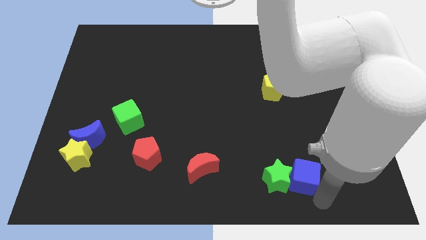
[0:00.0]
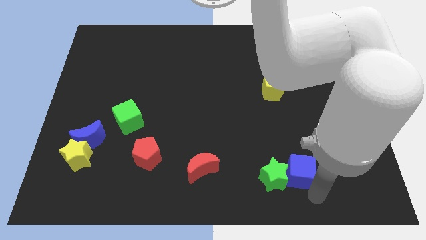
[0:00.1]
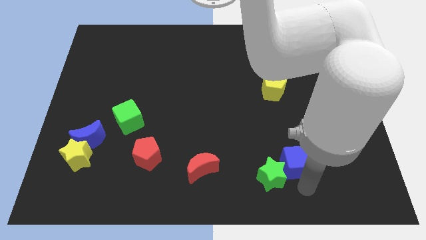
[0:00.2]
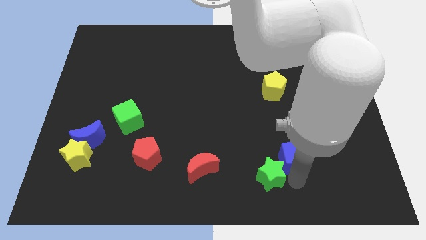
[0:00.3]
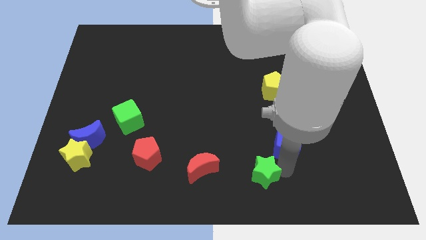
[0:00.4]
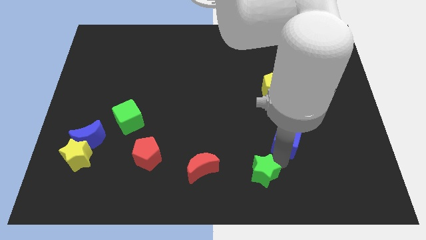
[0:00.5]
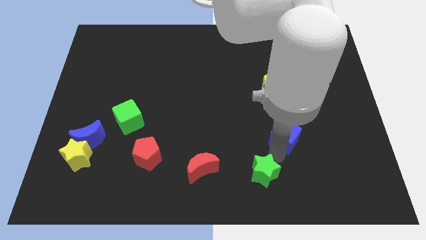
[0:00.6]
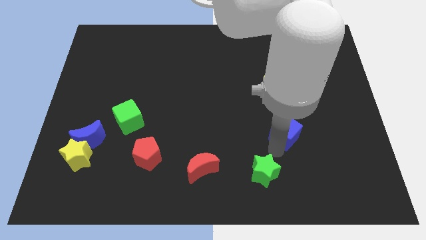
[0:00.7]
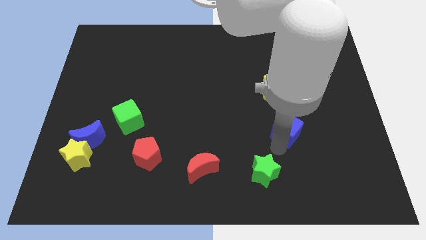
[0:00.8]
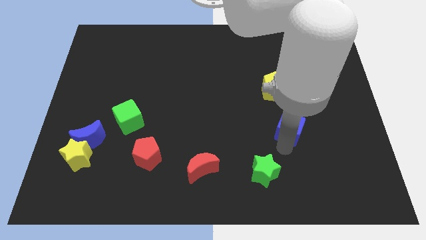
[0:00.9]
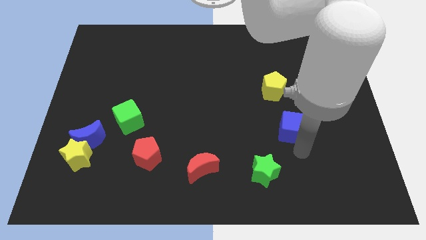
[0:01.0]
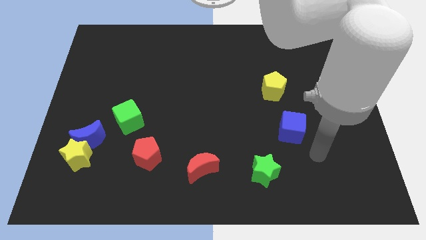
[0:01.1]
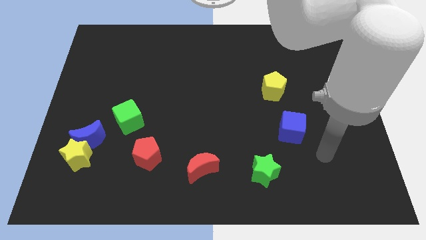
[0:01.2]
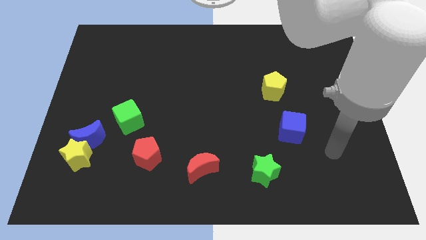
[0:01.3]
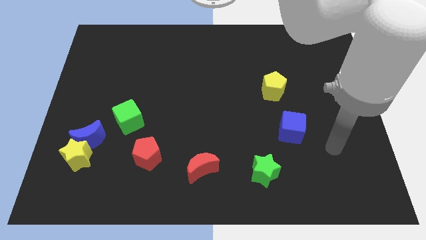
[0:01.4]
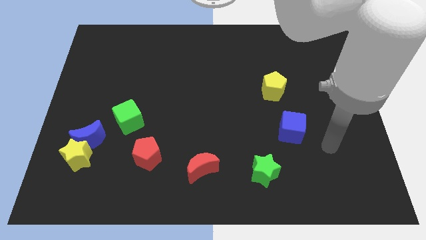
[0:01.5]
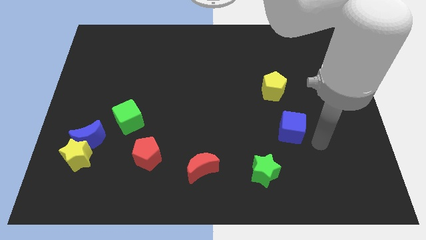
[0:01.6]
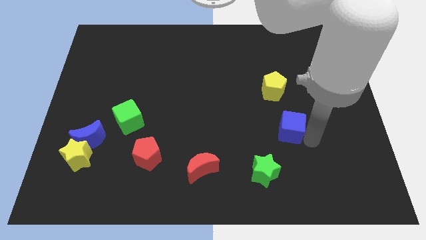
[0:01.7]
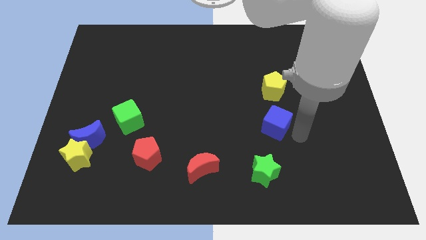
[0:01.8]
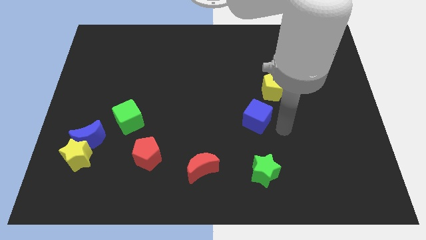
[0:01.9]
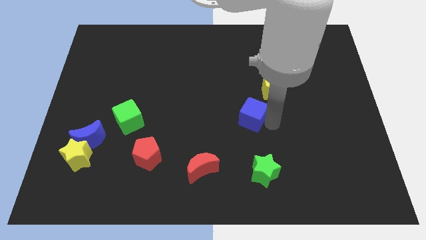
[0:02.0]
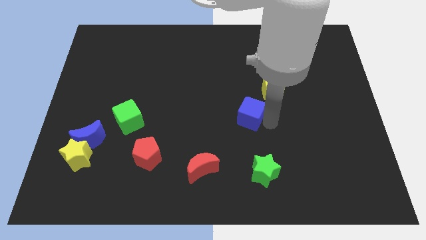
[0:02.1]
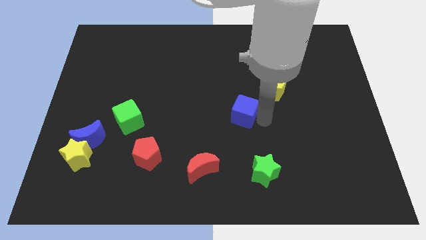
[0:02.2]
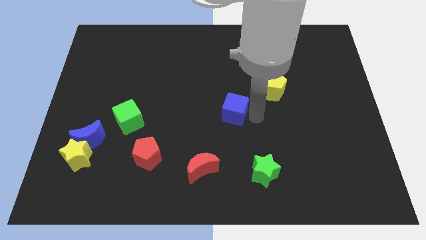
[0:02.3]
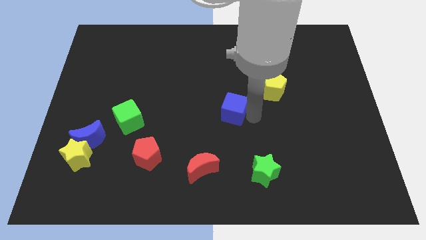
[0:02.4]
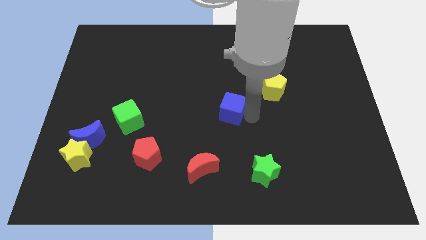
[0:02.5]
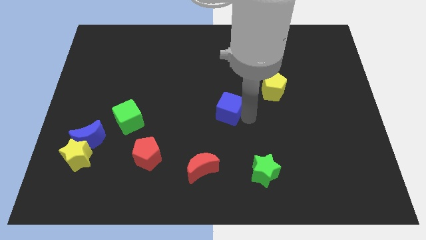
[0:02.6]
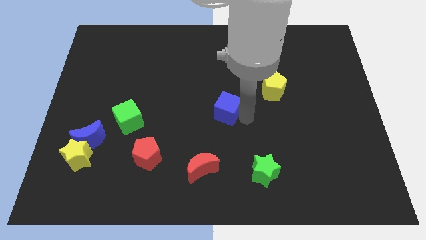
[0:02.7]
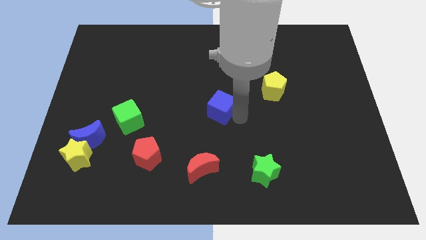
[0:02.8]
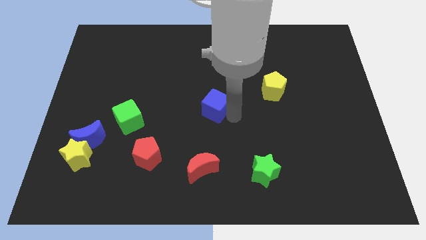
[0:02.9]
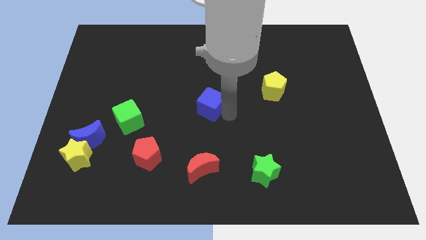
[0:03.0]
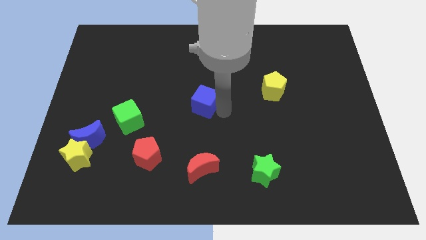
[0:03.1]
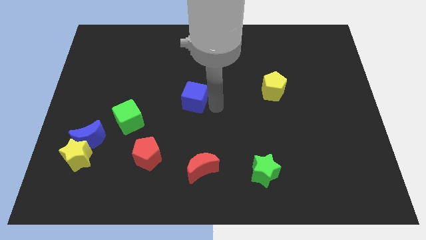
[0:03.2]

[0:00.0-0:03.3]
move the blue cube away from the right side of the green star

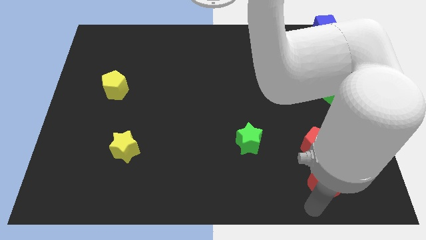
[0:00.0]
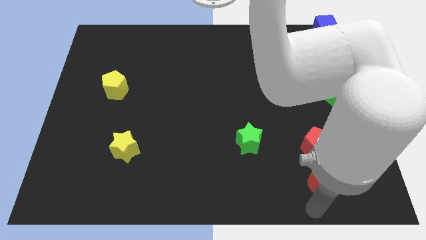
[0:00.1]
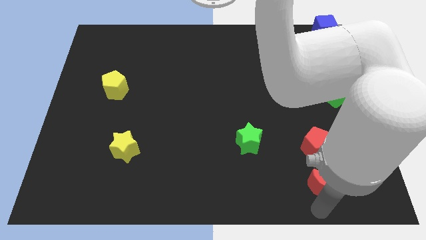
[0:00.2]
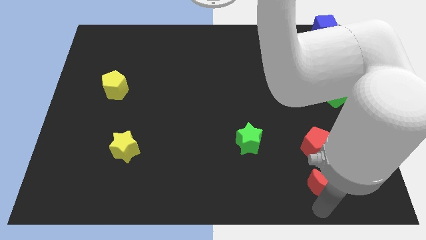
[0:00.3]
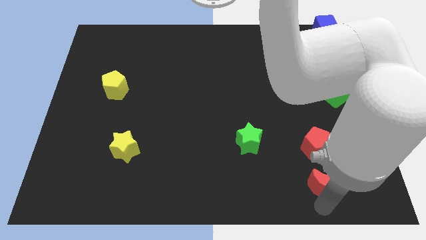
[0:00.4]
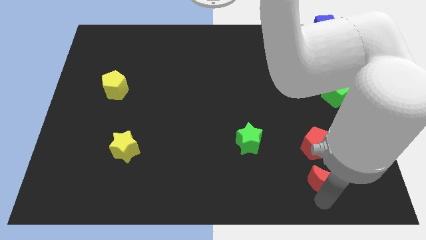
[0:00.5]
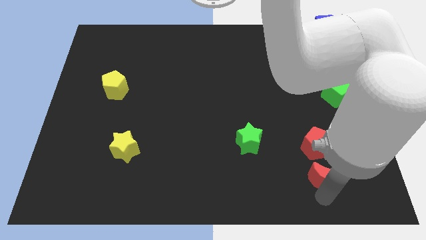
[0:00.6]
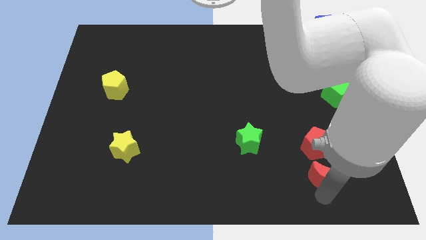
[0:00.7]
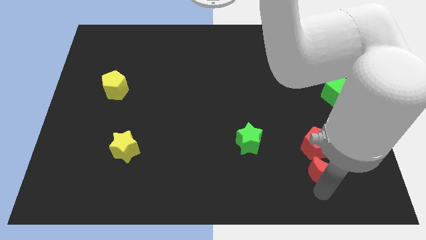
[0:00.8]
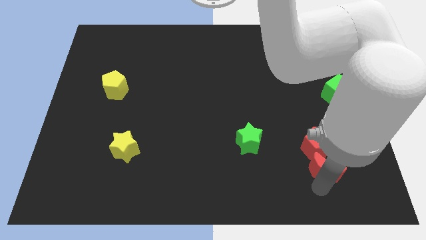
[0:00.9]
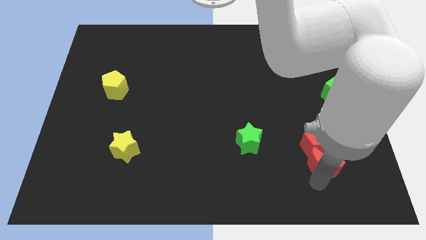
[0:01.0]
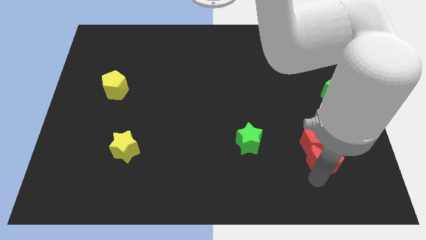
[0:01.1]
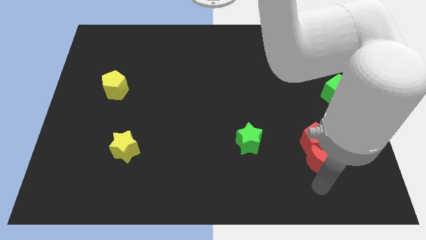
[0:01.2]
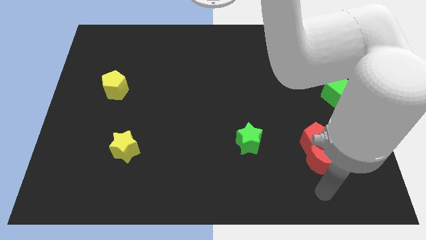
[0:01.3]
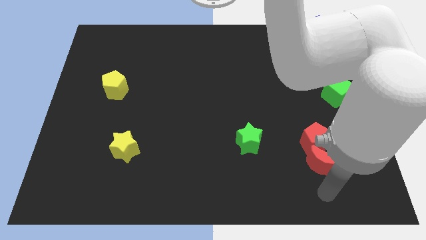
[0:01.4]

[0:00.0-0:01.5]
push the red moon into the red pentagon

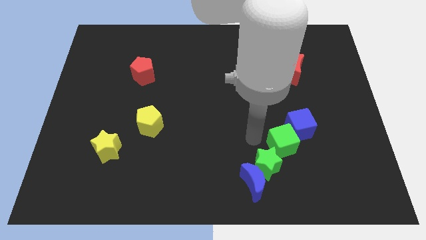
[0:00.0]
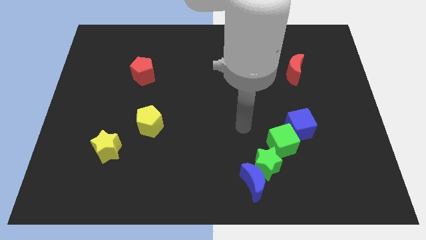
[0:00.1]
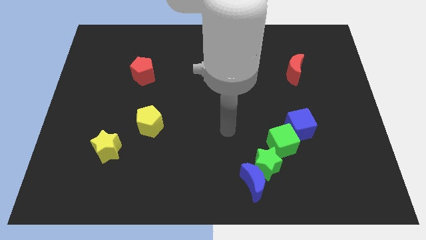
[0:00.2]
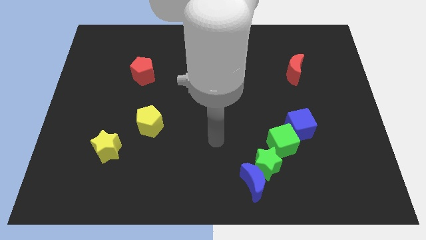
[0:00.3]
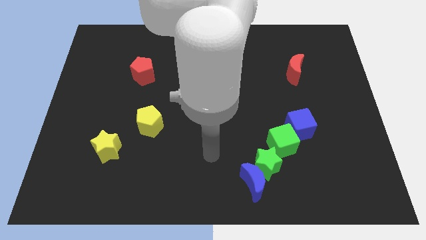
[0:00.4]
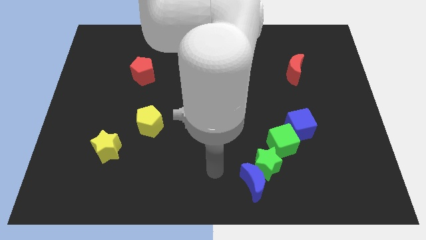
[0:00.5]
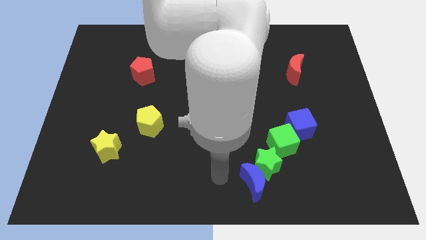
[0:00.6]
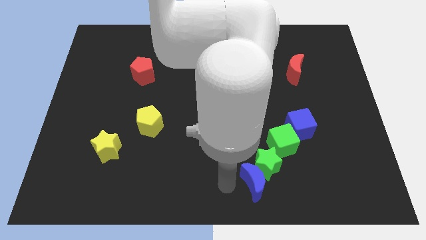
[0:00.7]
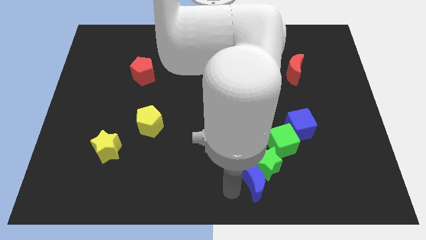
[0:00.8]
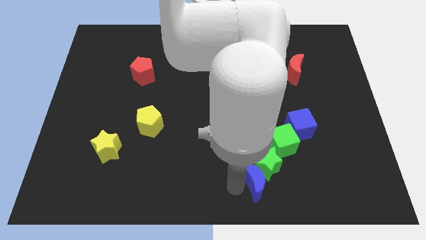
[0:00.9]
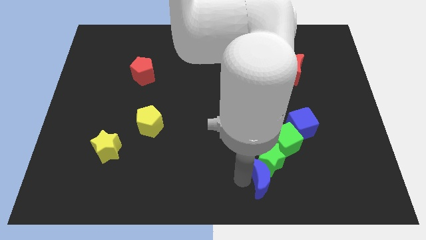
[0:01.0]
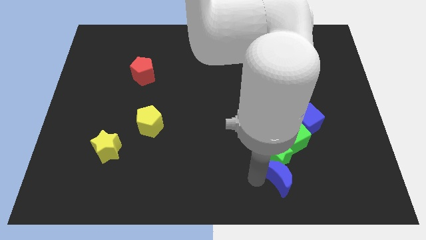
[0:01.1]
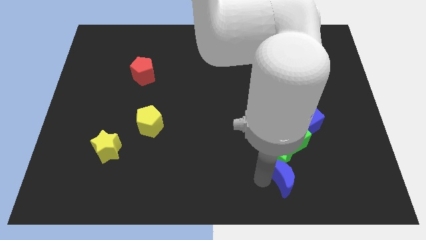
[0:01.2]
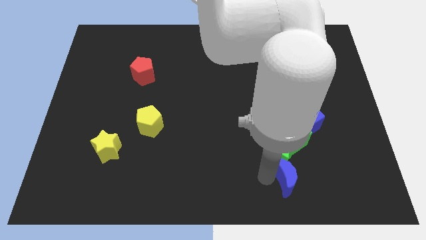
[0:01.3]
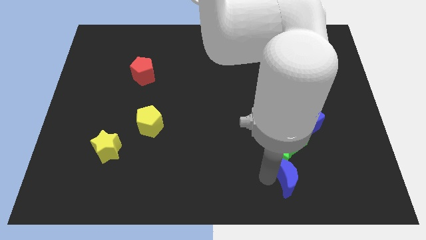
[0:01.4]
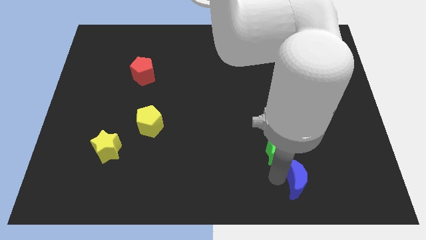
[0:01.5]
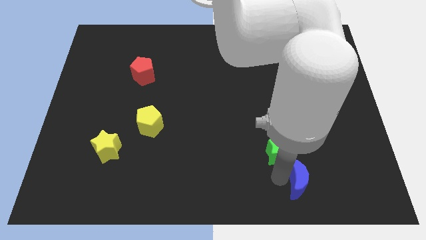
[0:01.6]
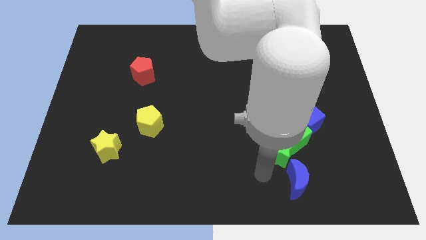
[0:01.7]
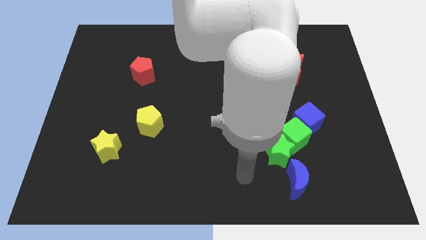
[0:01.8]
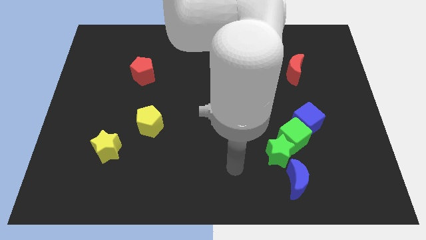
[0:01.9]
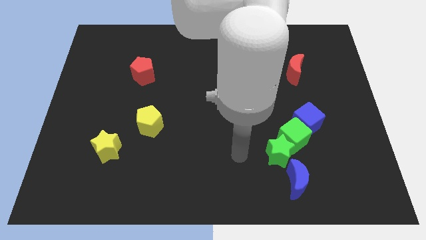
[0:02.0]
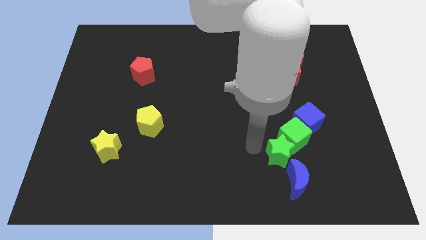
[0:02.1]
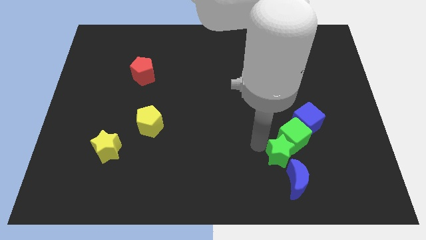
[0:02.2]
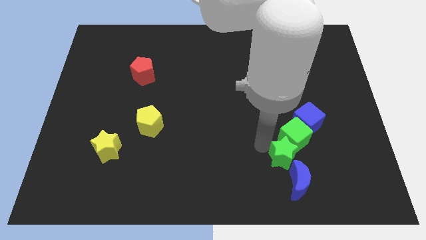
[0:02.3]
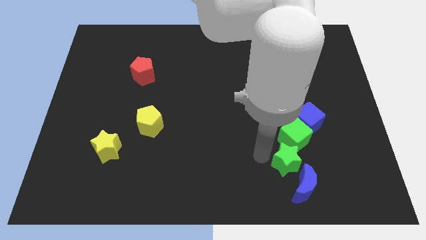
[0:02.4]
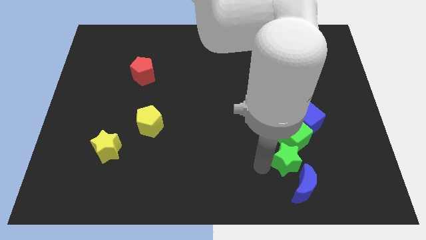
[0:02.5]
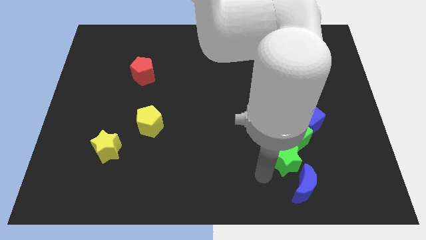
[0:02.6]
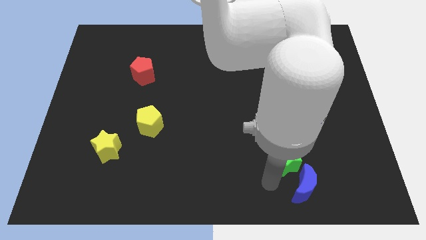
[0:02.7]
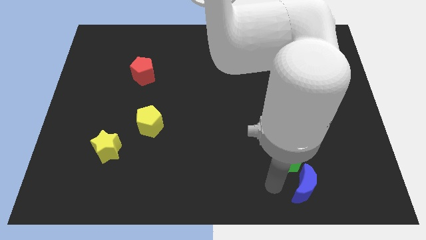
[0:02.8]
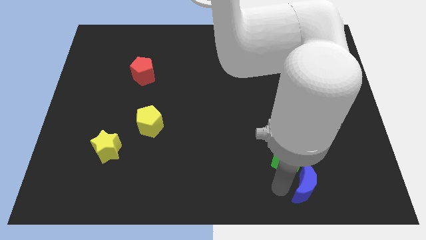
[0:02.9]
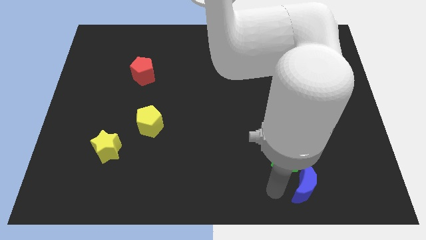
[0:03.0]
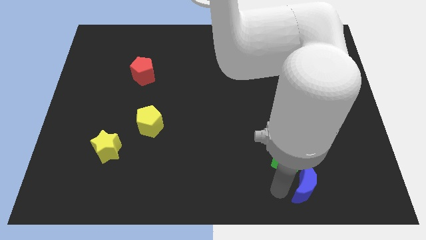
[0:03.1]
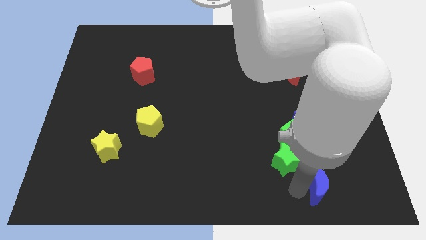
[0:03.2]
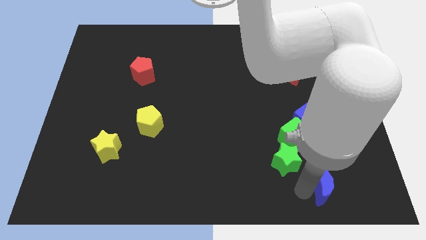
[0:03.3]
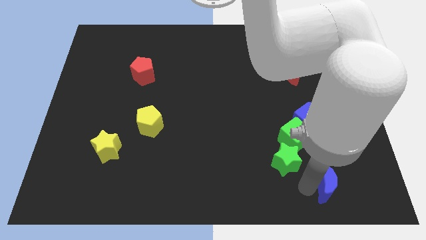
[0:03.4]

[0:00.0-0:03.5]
move the blue moon to the bottom right of the green star

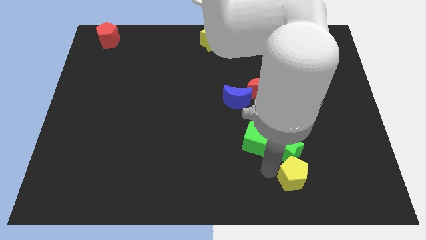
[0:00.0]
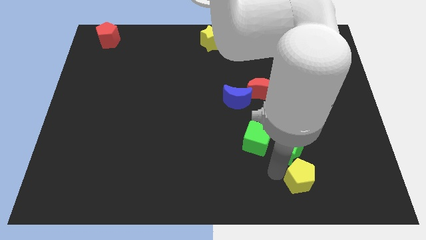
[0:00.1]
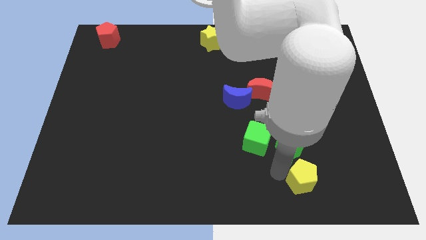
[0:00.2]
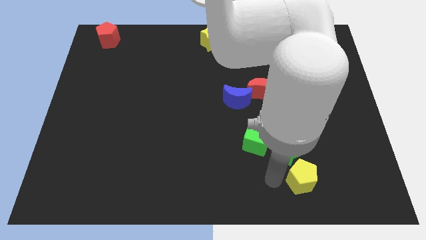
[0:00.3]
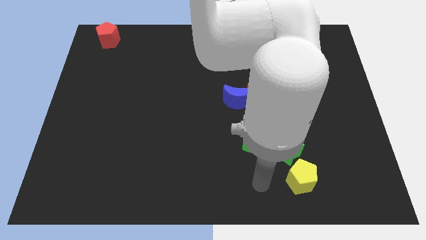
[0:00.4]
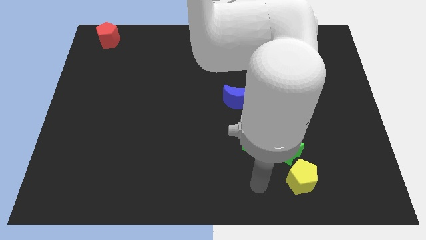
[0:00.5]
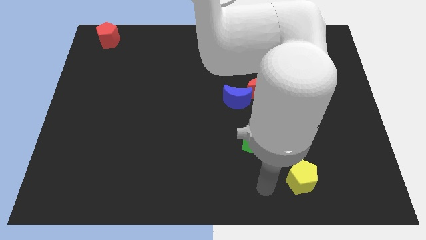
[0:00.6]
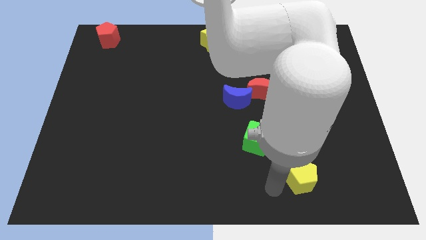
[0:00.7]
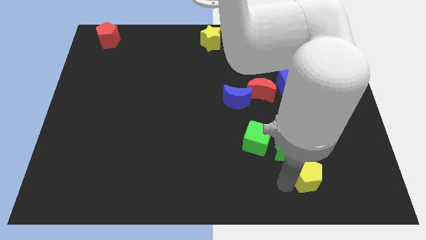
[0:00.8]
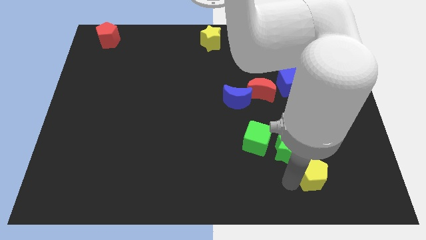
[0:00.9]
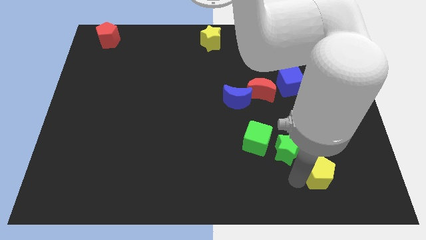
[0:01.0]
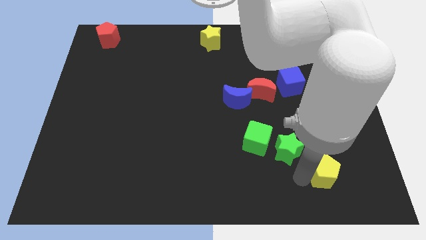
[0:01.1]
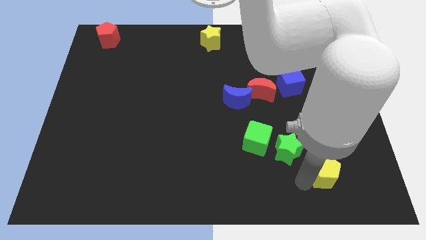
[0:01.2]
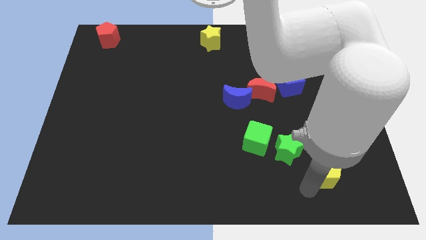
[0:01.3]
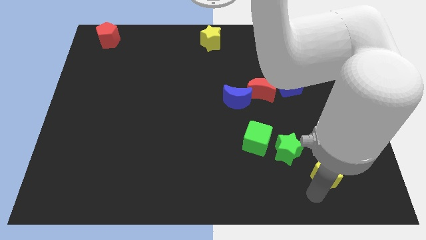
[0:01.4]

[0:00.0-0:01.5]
move the yellow pentagon away from the green star
